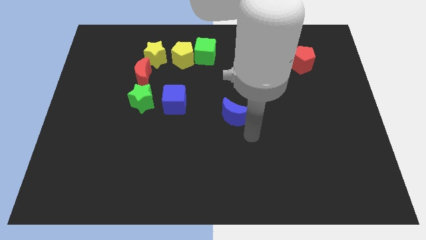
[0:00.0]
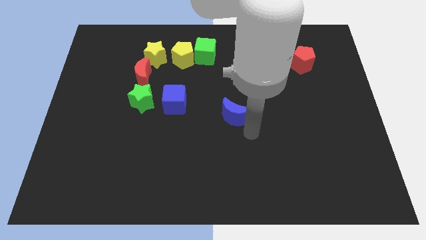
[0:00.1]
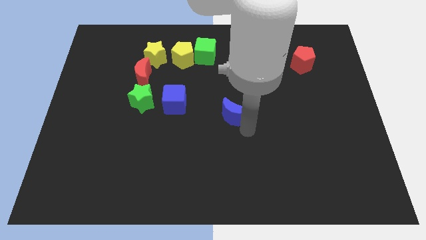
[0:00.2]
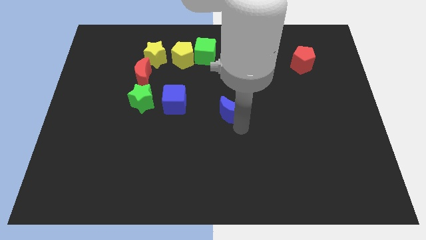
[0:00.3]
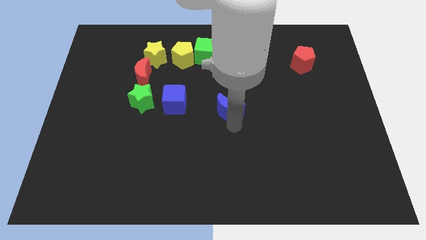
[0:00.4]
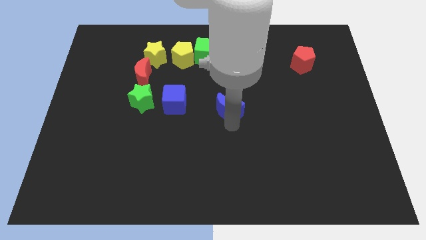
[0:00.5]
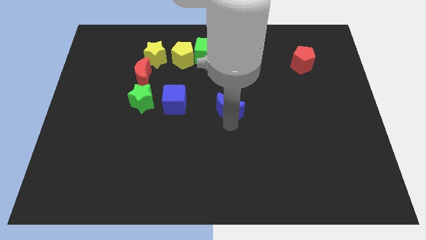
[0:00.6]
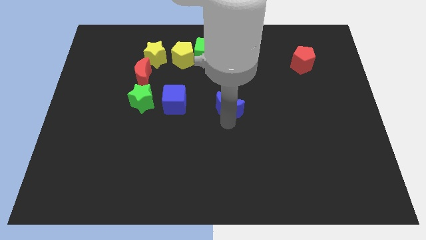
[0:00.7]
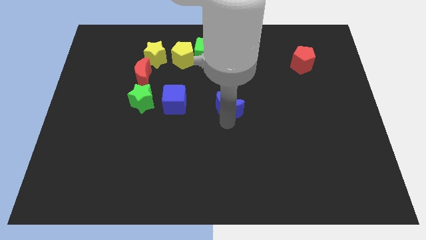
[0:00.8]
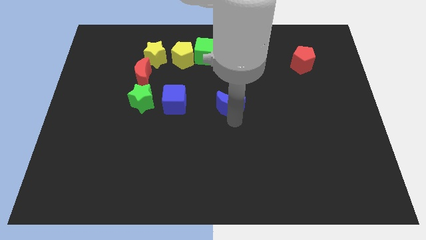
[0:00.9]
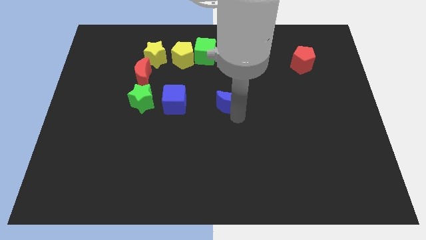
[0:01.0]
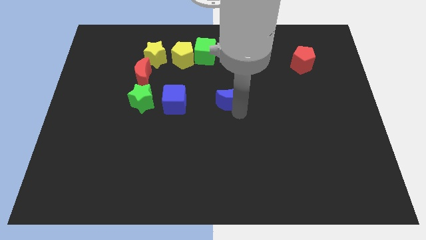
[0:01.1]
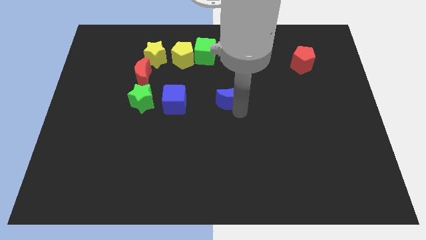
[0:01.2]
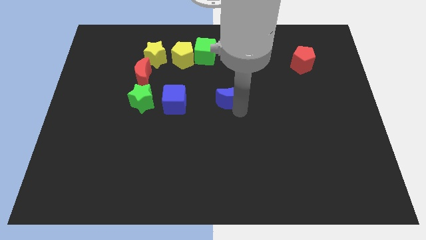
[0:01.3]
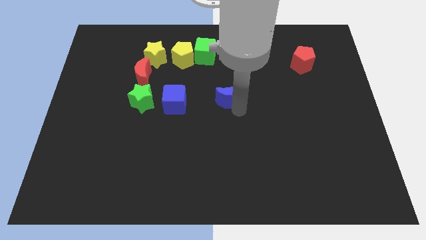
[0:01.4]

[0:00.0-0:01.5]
place blue moon parallel right to blue cube

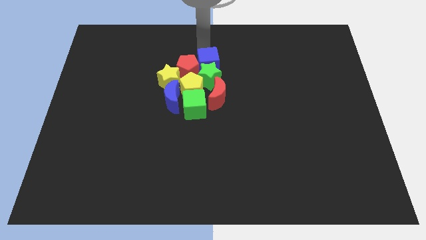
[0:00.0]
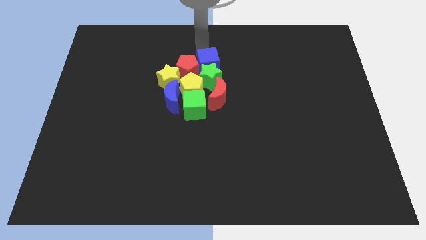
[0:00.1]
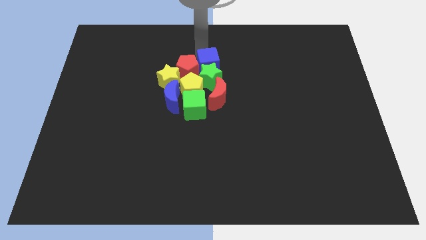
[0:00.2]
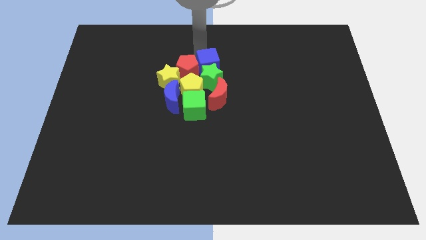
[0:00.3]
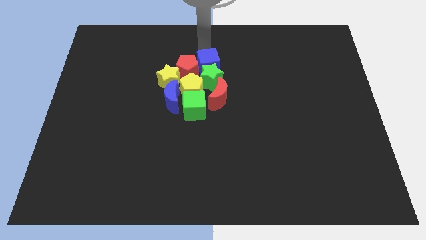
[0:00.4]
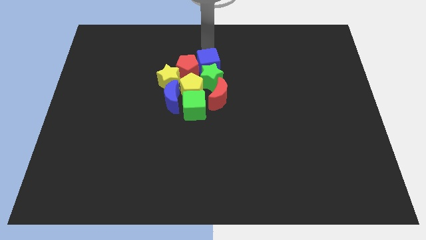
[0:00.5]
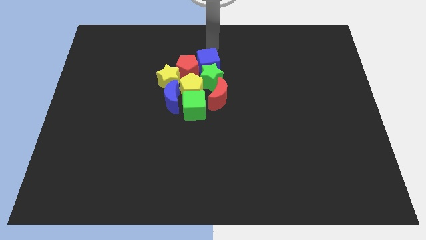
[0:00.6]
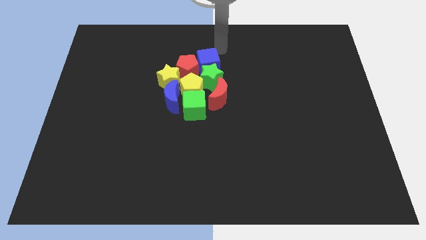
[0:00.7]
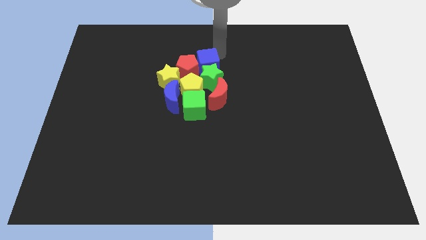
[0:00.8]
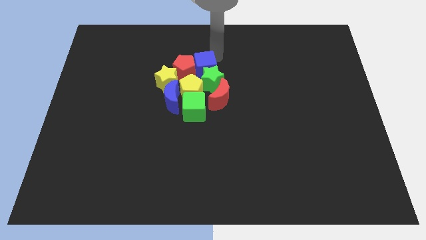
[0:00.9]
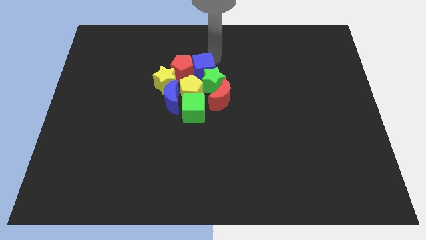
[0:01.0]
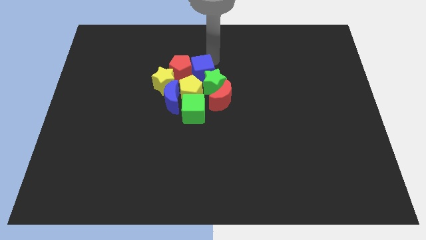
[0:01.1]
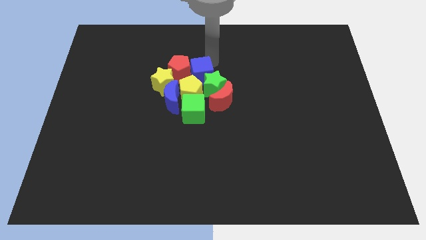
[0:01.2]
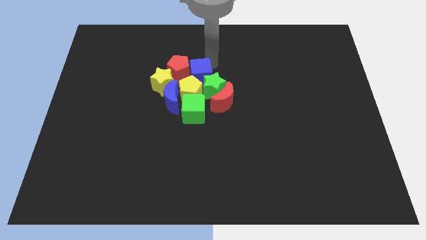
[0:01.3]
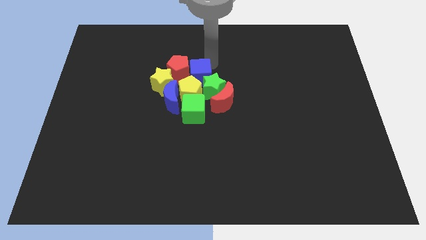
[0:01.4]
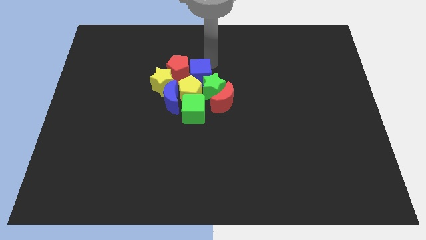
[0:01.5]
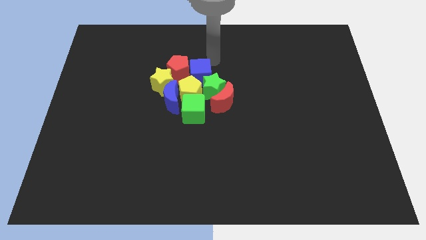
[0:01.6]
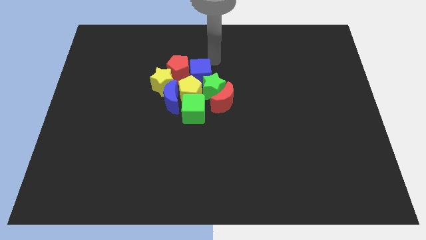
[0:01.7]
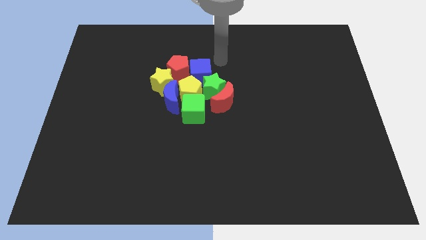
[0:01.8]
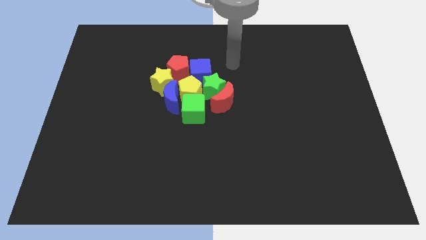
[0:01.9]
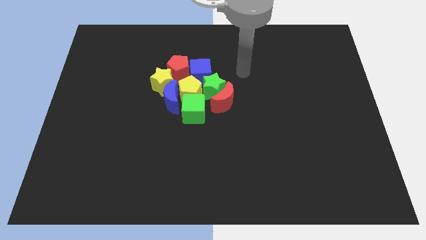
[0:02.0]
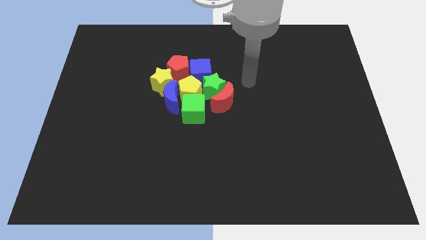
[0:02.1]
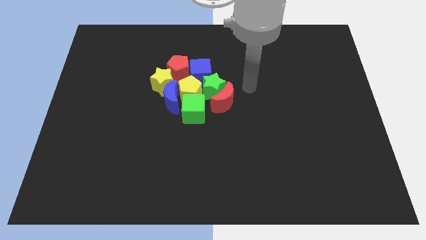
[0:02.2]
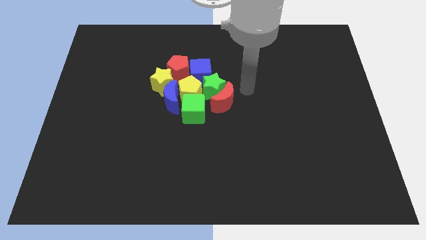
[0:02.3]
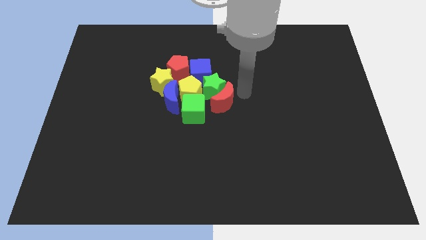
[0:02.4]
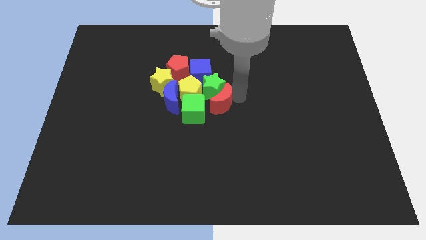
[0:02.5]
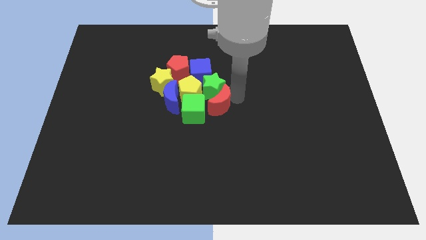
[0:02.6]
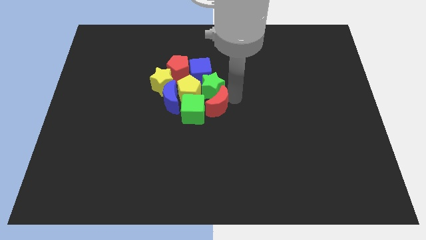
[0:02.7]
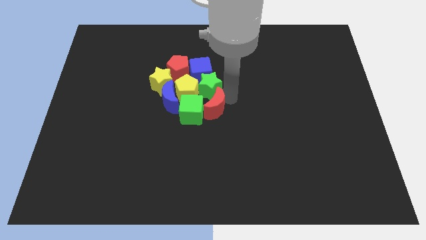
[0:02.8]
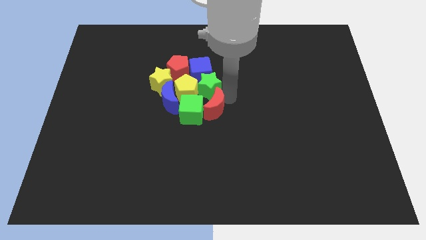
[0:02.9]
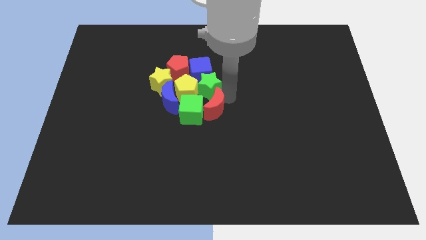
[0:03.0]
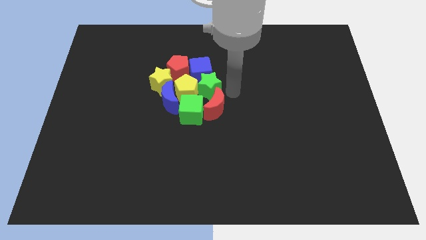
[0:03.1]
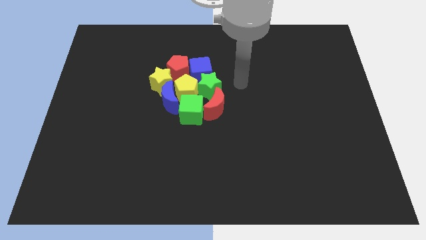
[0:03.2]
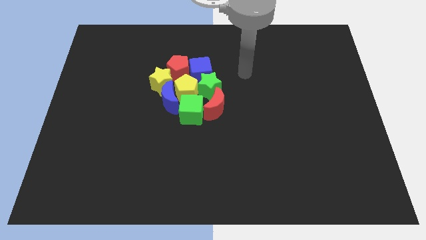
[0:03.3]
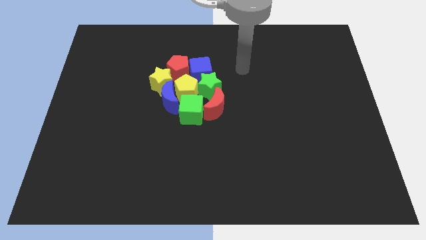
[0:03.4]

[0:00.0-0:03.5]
move the blue cubered crescent into the group of blocks

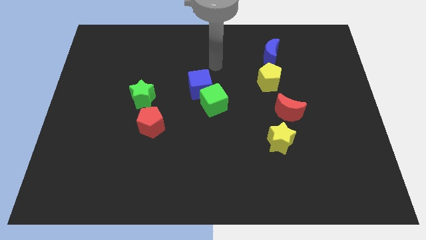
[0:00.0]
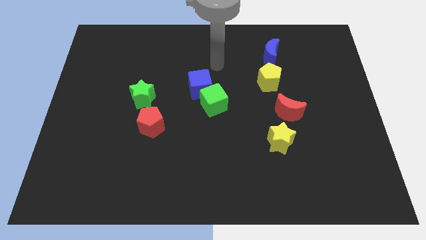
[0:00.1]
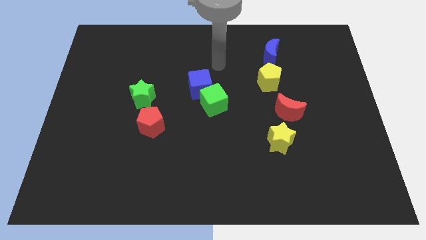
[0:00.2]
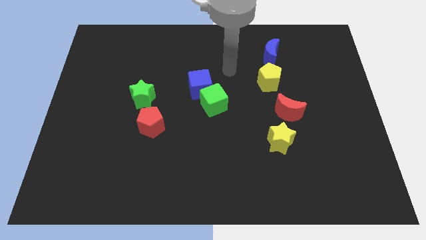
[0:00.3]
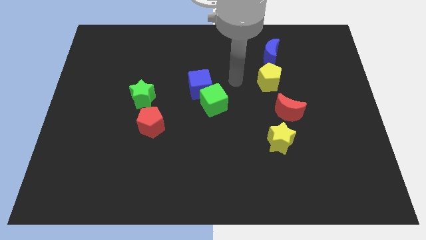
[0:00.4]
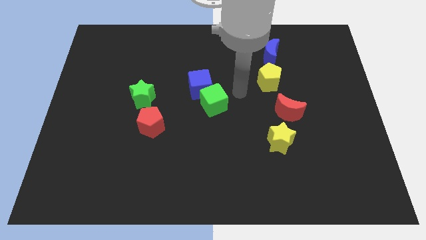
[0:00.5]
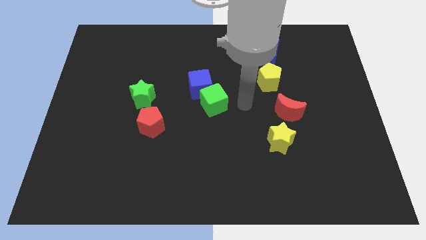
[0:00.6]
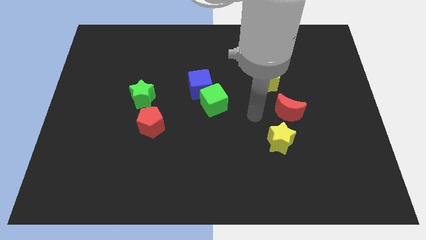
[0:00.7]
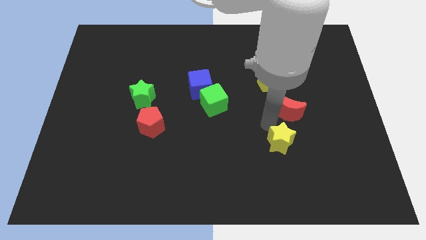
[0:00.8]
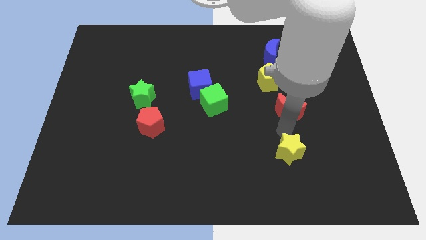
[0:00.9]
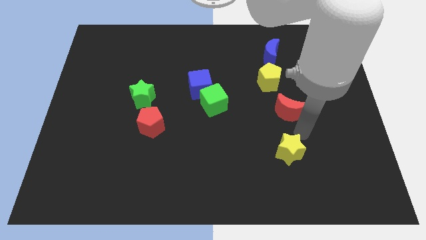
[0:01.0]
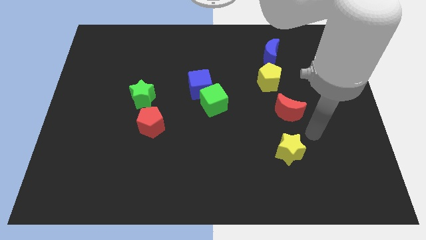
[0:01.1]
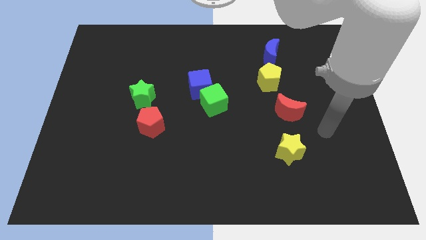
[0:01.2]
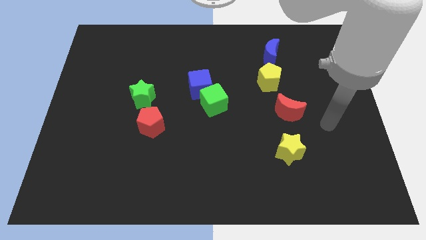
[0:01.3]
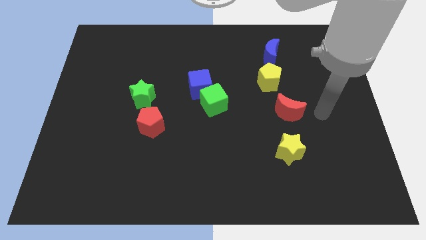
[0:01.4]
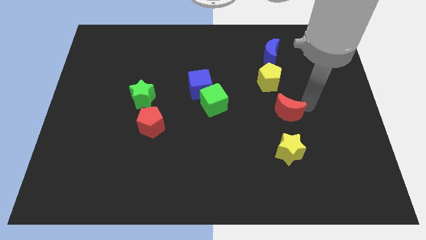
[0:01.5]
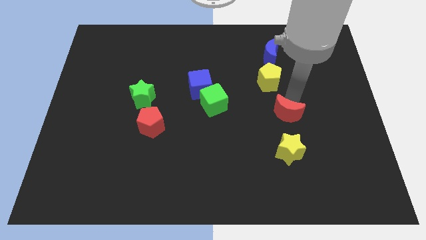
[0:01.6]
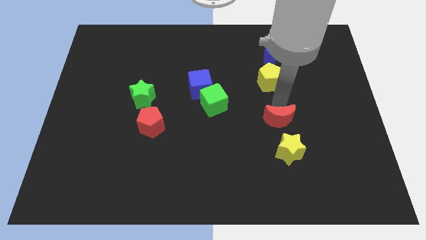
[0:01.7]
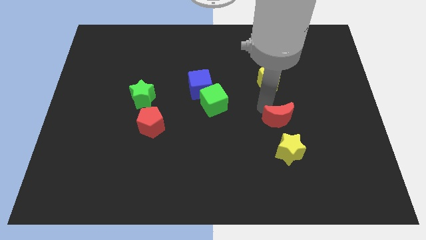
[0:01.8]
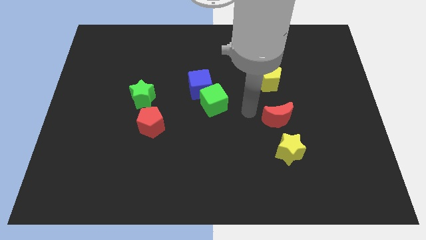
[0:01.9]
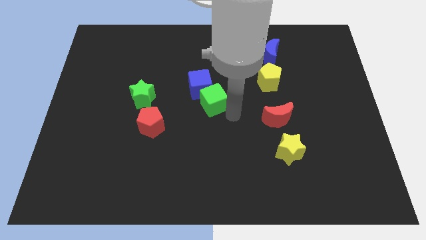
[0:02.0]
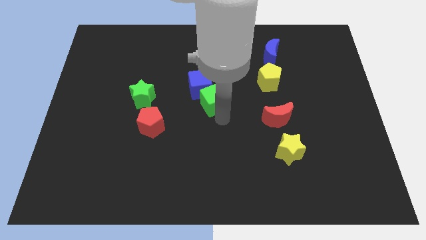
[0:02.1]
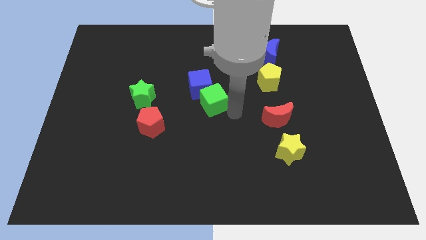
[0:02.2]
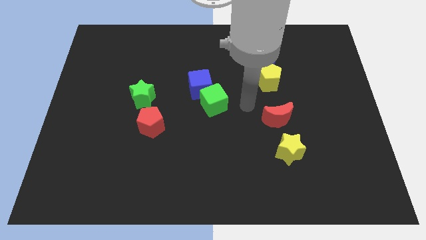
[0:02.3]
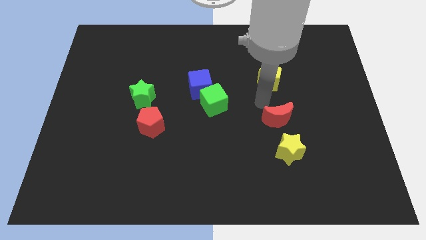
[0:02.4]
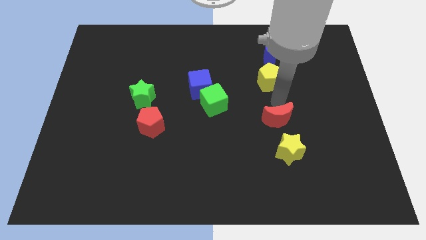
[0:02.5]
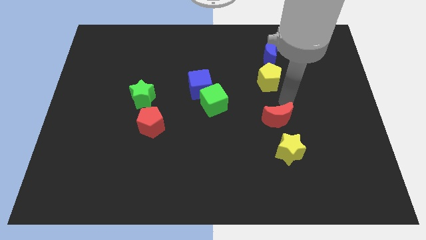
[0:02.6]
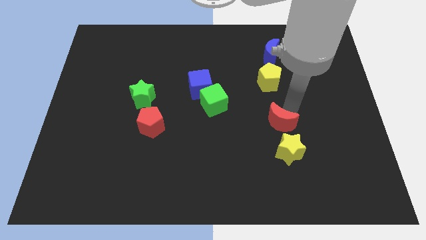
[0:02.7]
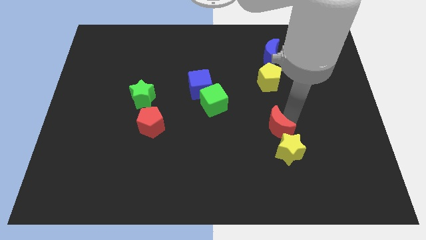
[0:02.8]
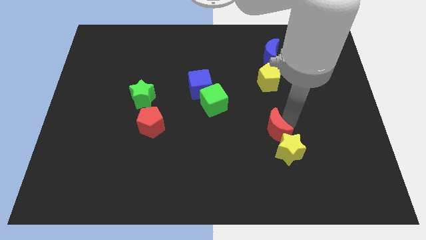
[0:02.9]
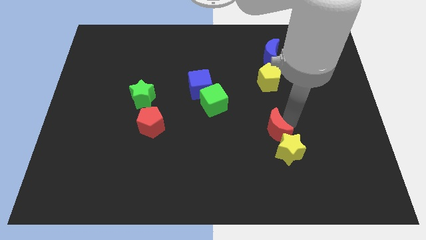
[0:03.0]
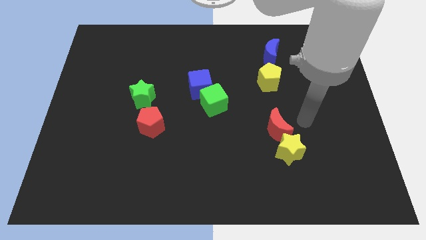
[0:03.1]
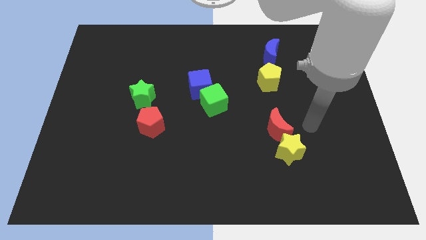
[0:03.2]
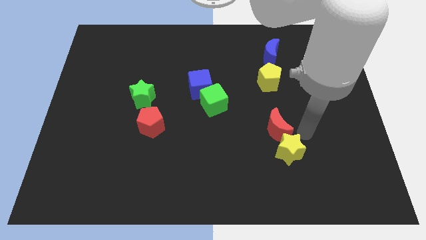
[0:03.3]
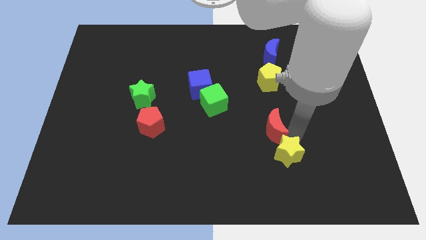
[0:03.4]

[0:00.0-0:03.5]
place red moon above yellow star

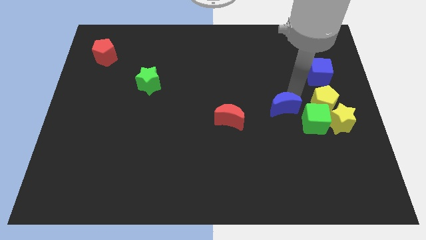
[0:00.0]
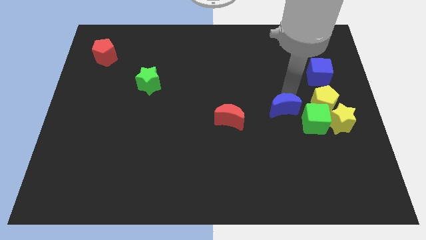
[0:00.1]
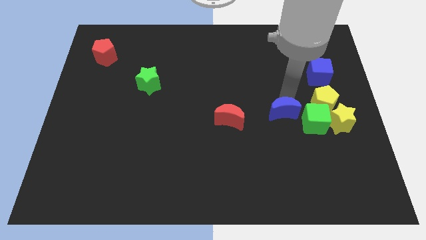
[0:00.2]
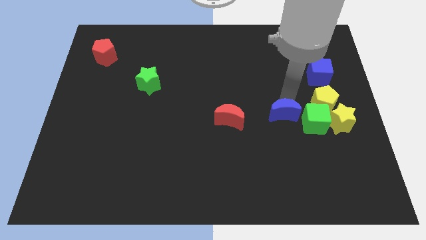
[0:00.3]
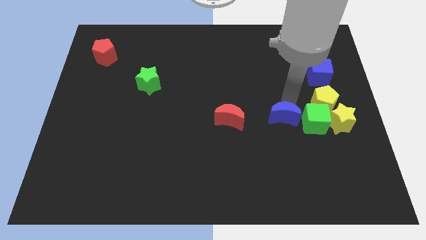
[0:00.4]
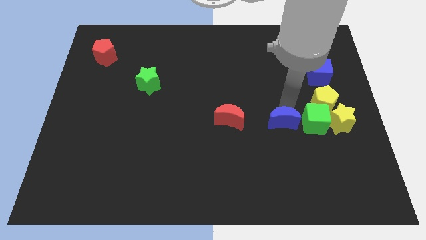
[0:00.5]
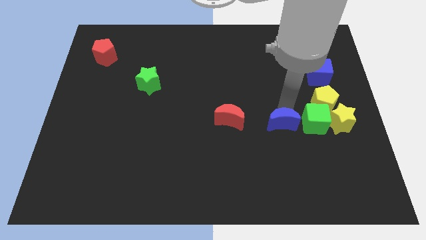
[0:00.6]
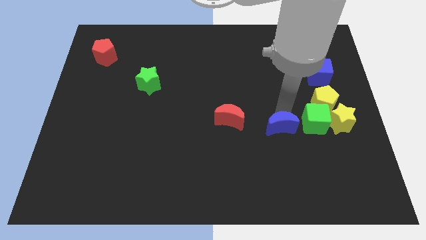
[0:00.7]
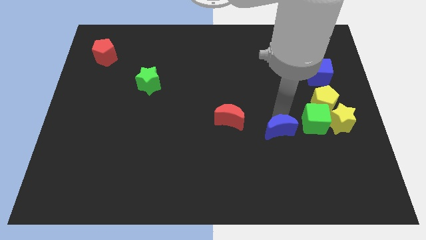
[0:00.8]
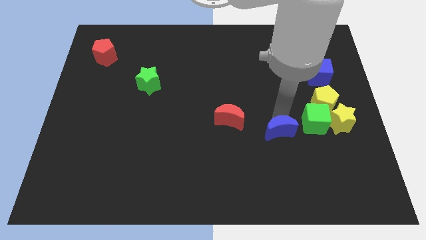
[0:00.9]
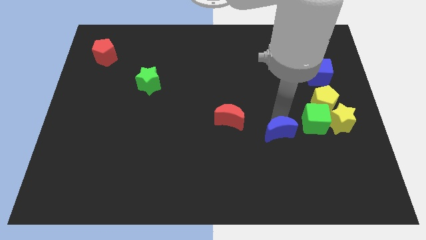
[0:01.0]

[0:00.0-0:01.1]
push the blue crescent slightly to the bottom
